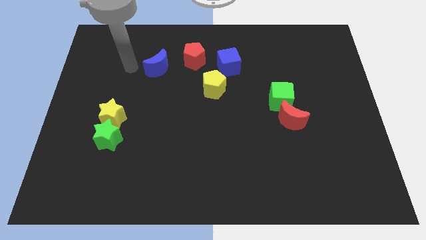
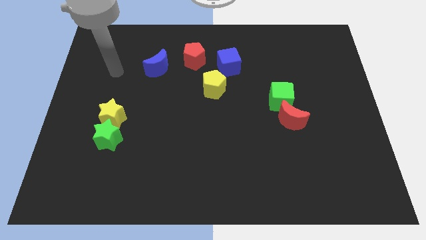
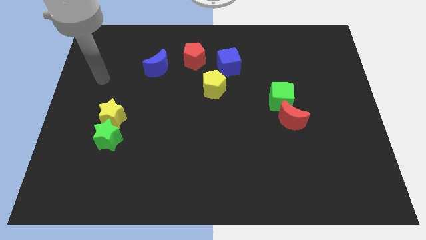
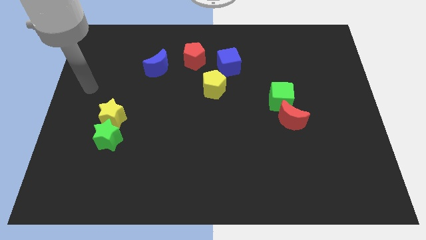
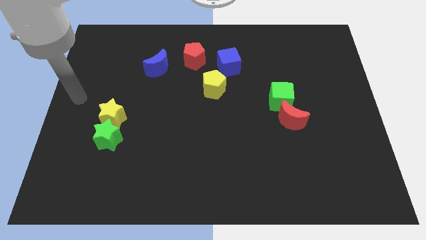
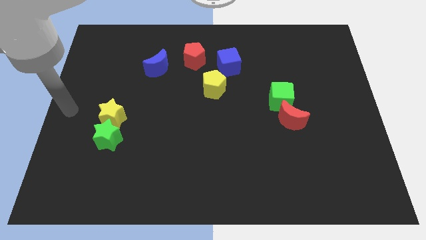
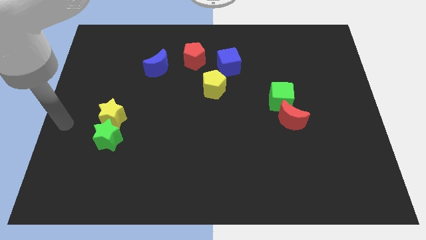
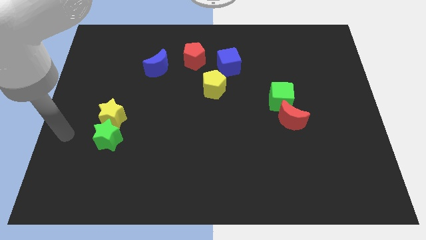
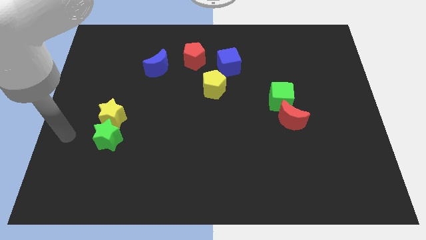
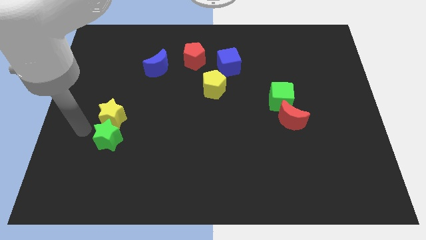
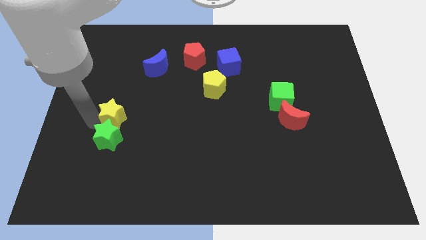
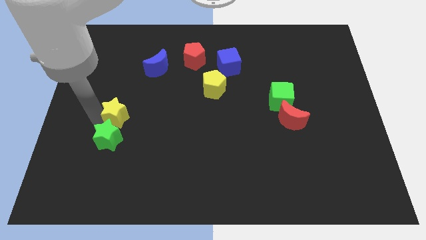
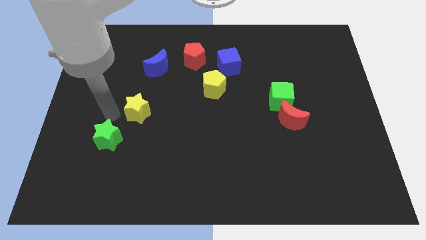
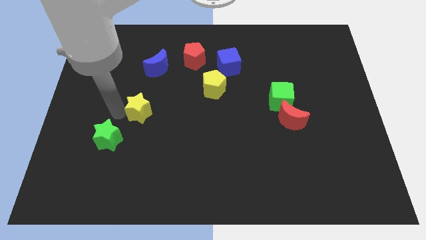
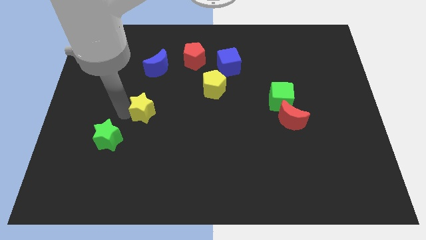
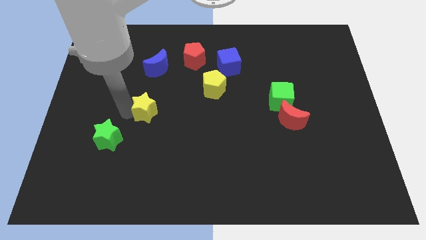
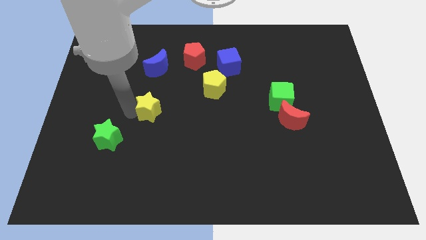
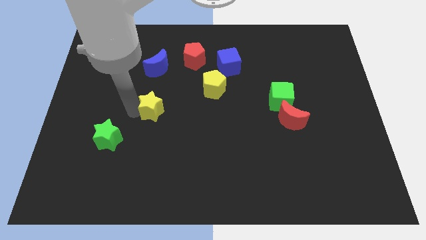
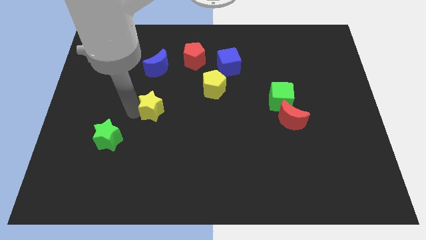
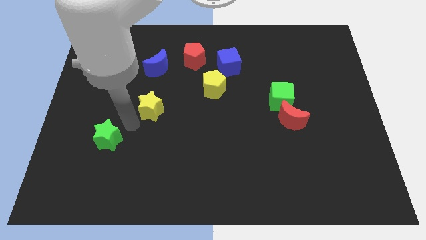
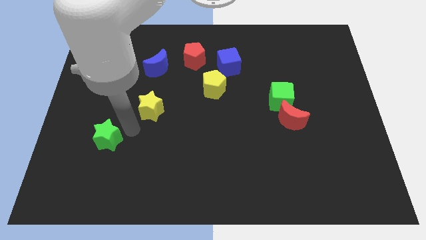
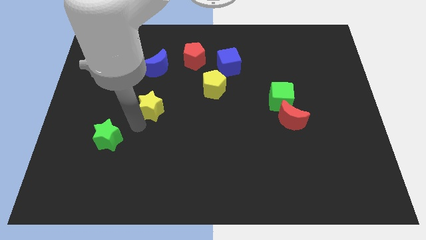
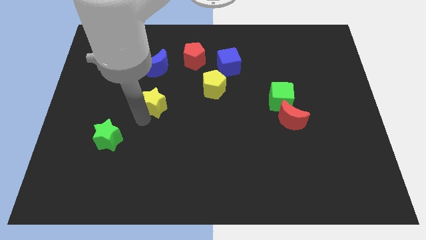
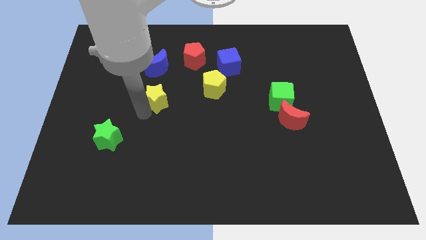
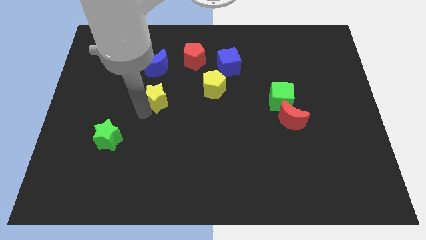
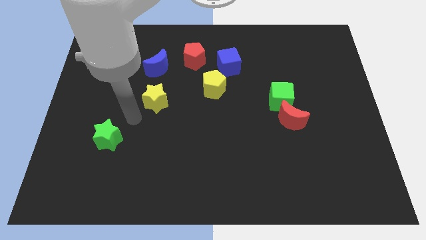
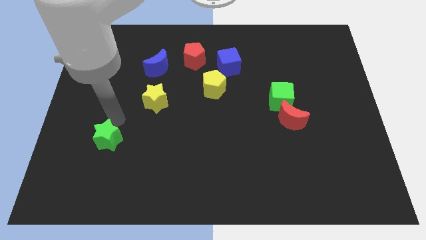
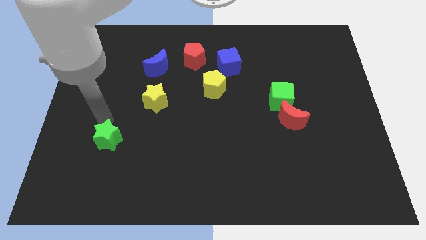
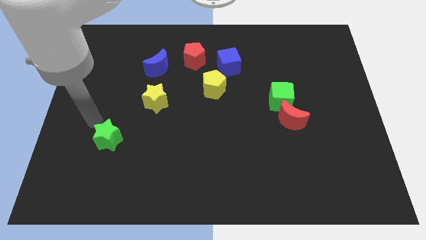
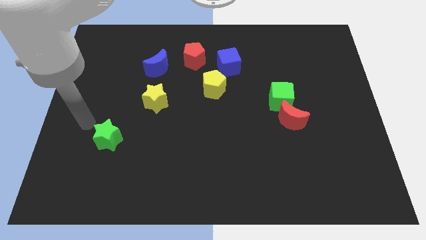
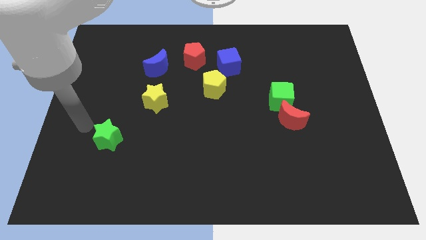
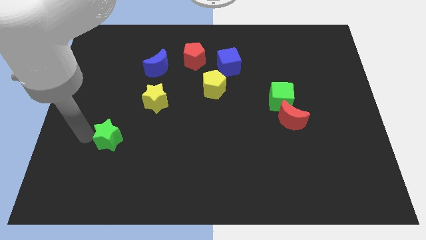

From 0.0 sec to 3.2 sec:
move the yellow star diagonally on the top right side of the green star

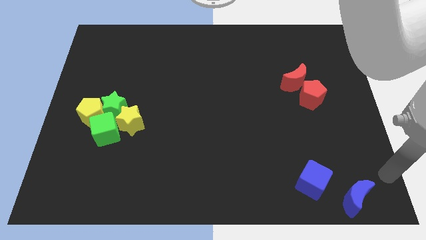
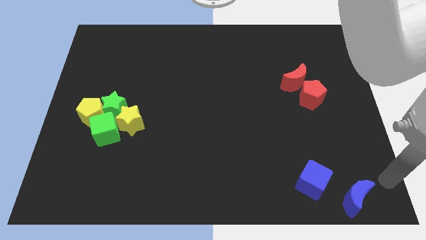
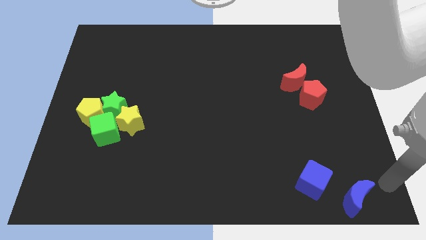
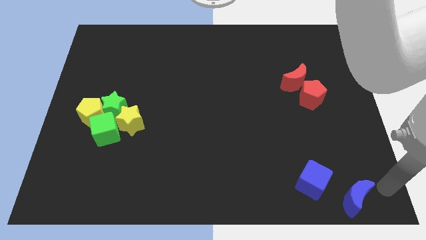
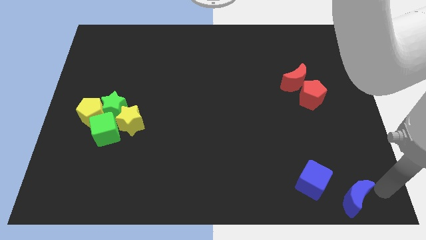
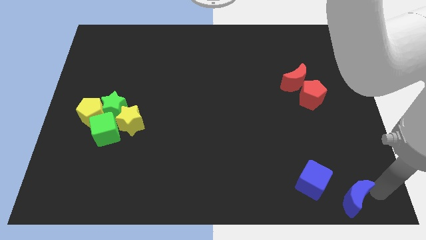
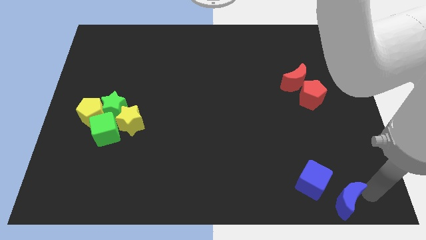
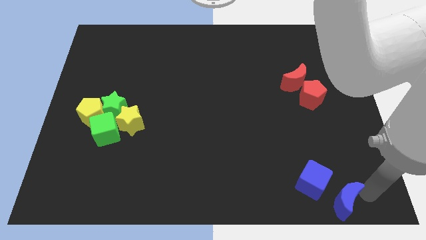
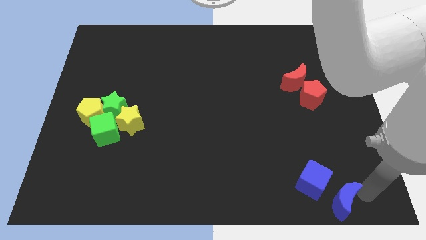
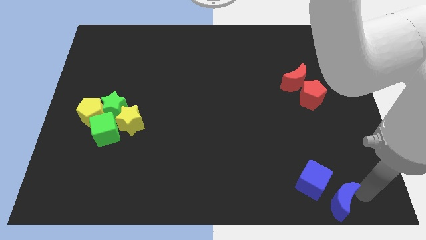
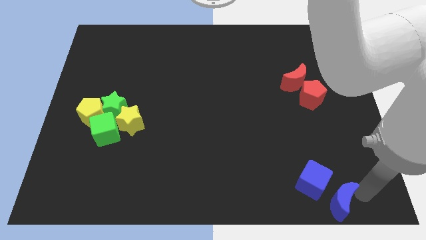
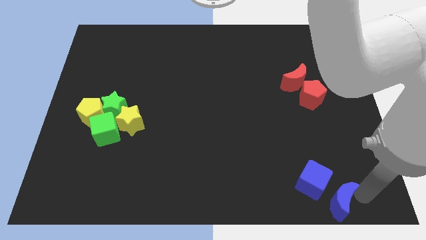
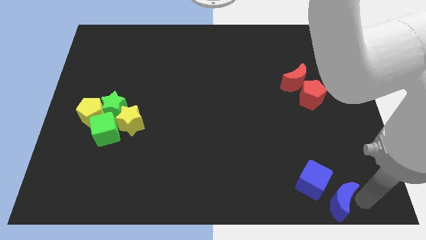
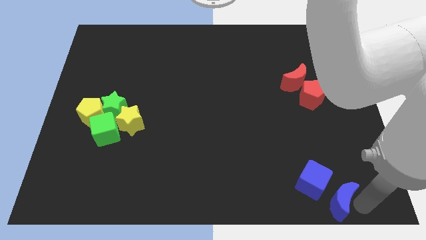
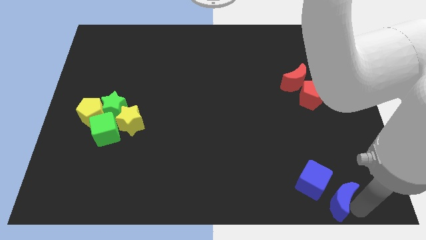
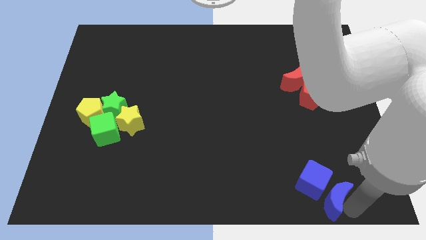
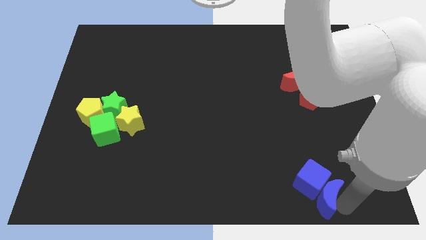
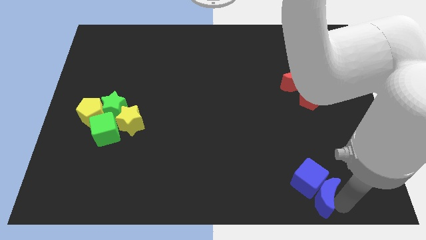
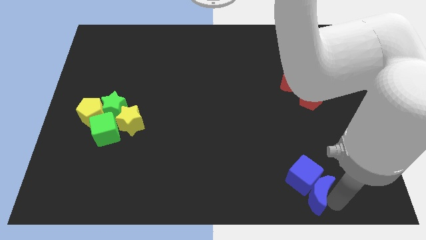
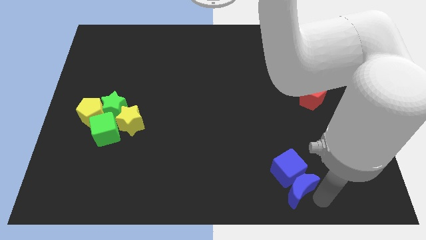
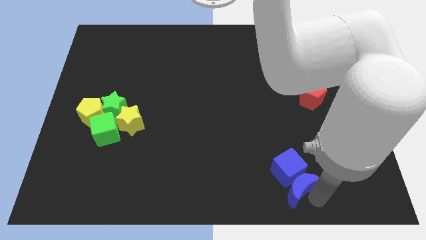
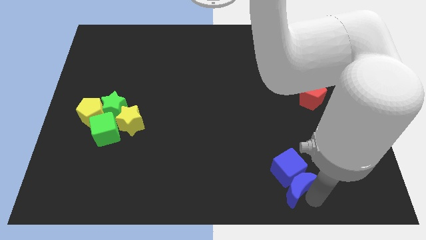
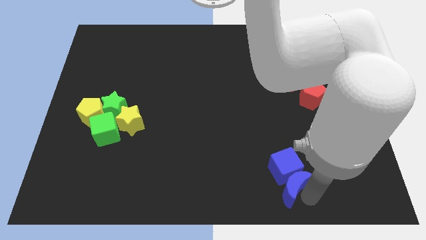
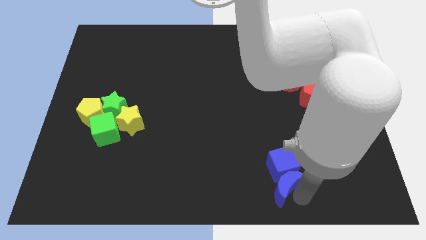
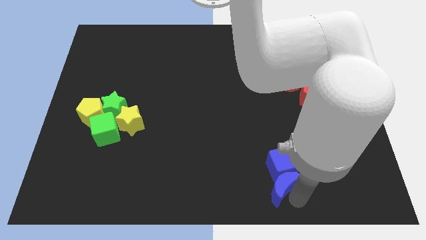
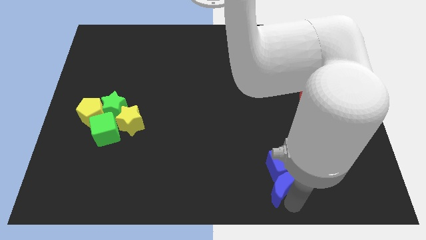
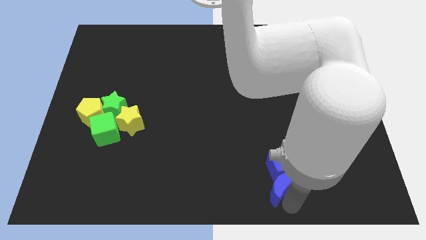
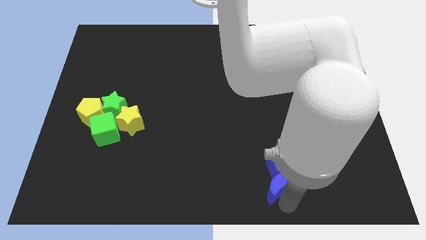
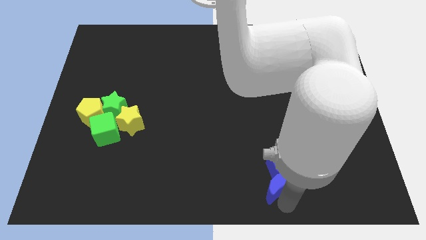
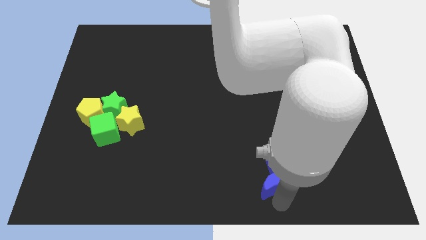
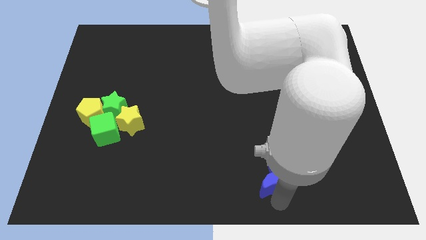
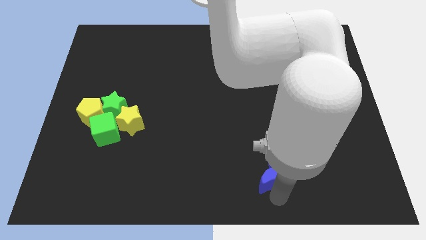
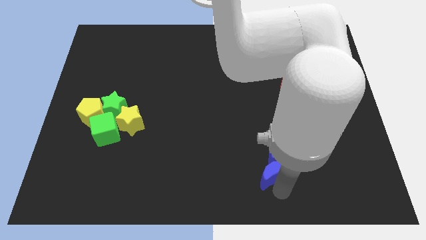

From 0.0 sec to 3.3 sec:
push the blue cube with the blue moon

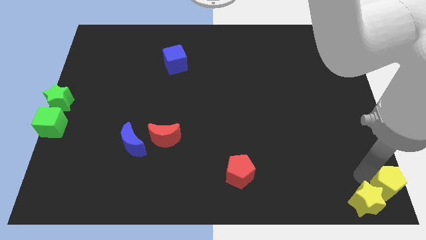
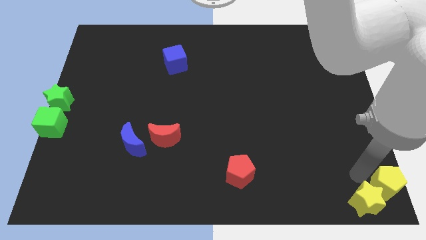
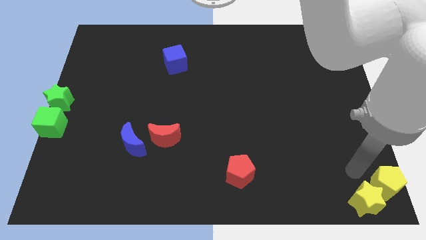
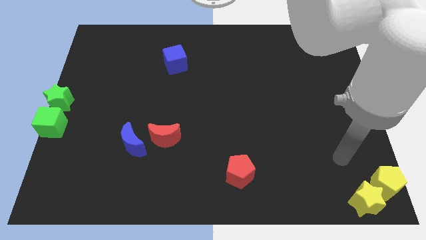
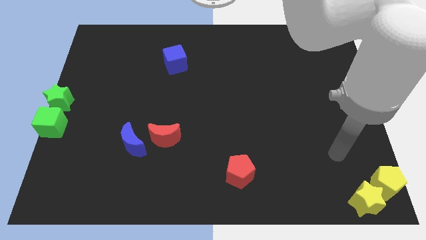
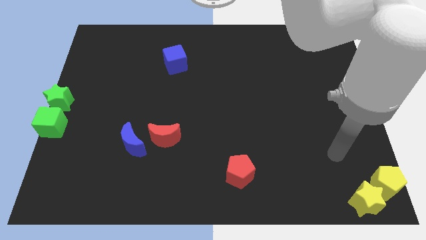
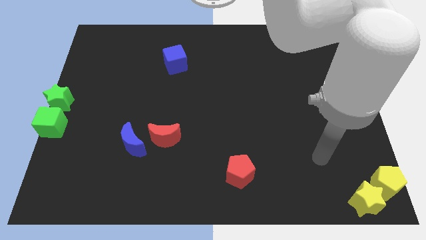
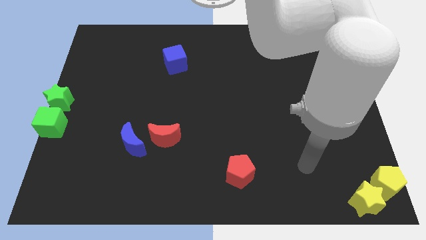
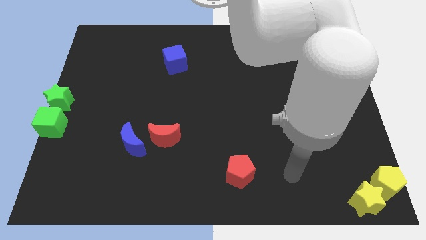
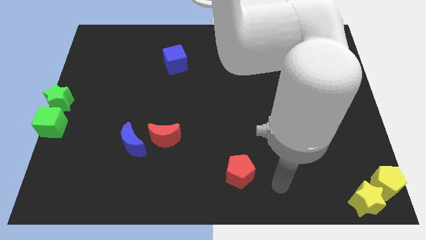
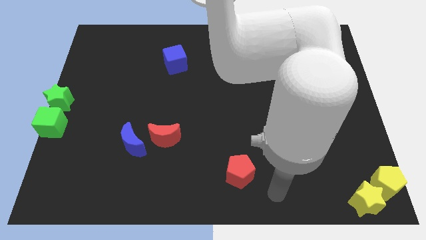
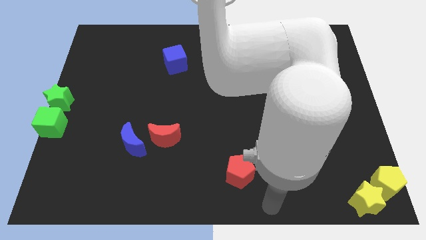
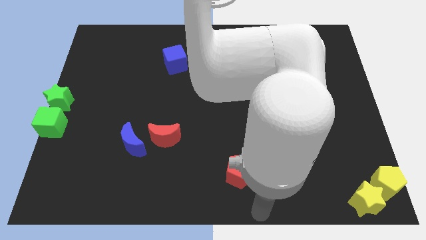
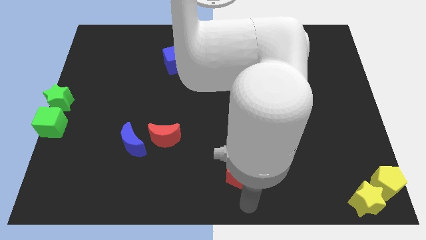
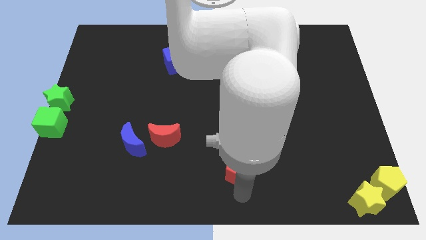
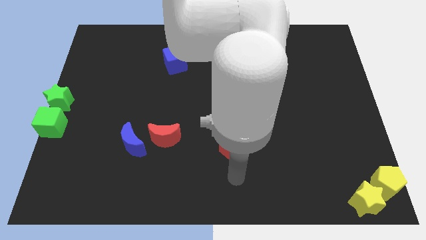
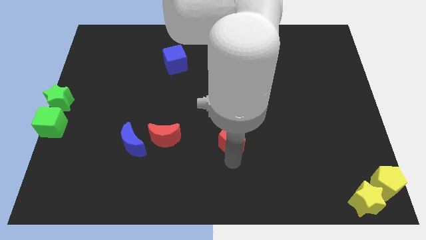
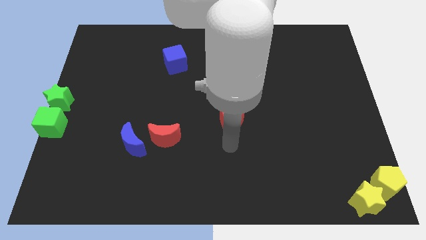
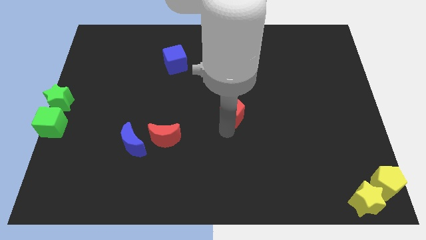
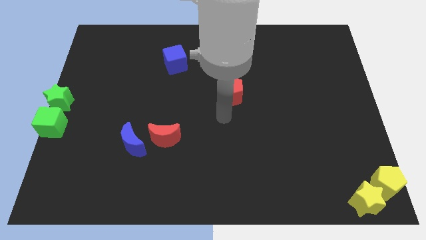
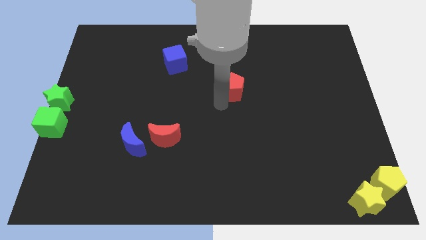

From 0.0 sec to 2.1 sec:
push the red pentagon upwards

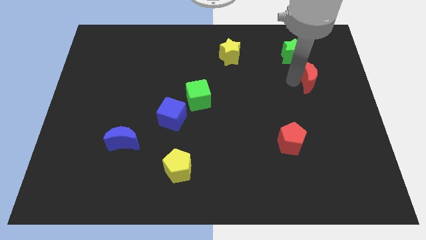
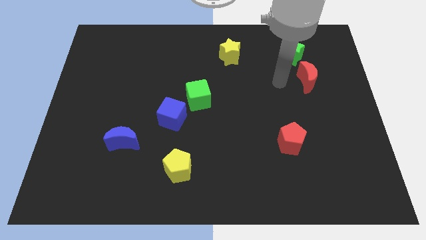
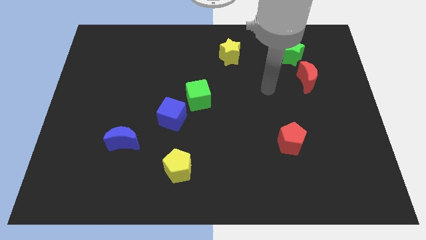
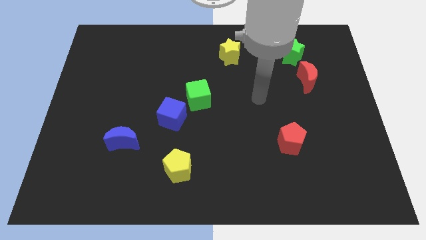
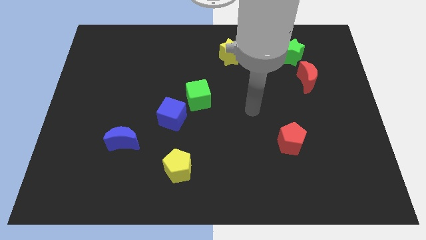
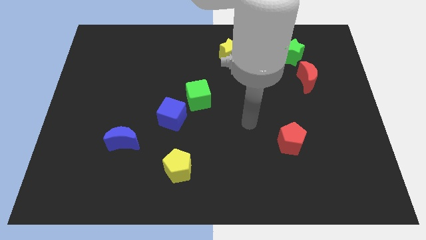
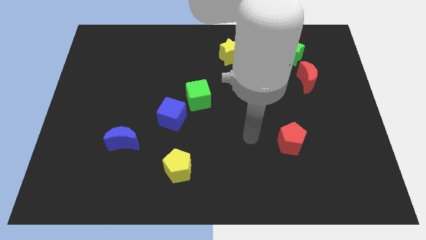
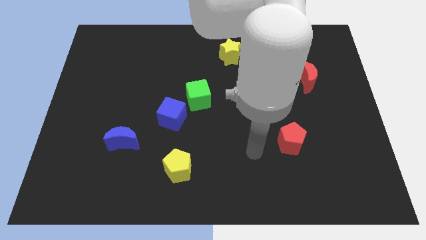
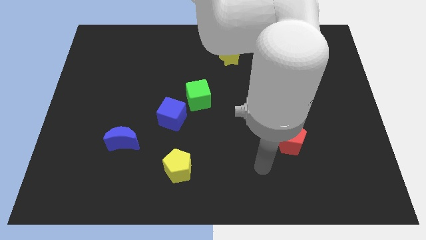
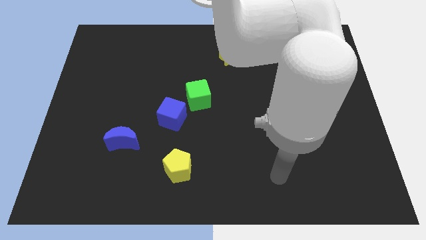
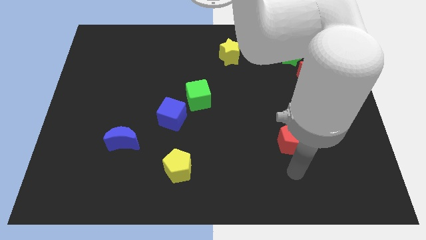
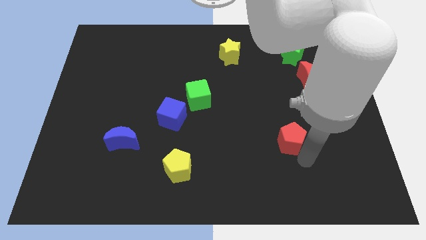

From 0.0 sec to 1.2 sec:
move the arm to the bottom of the red pentagon
